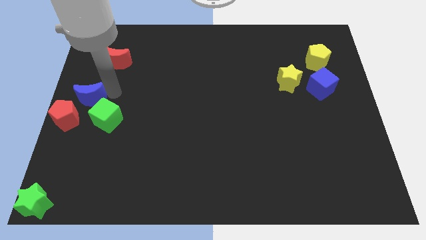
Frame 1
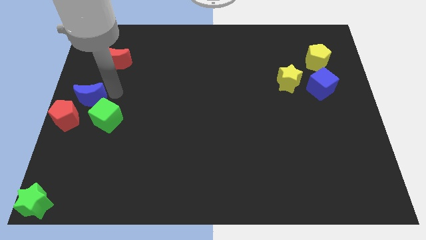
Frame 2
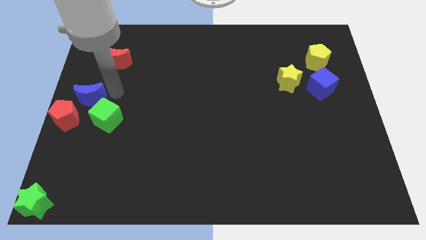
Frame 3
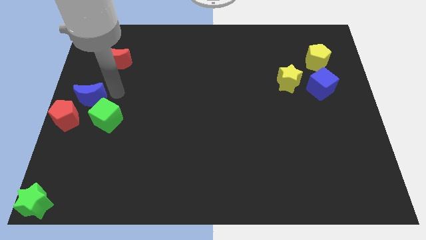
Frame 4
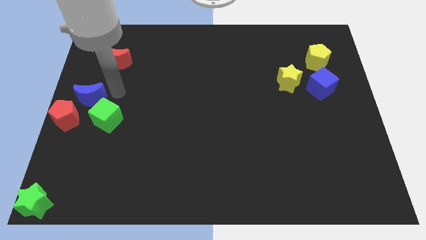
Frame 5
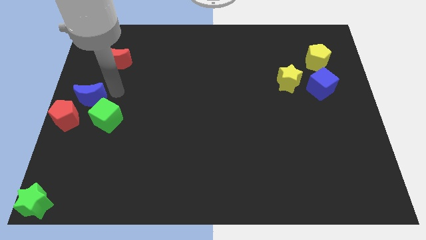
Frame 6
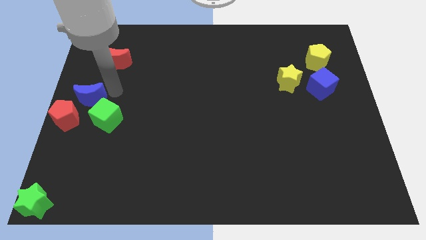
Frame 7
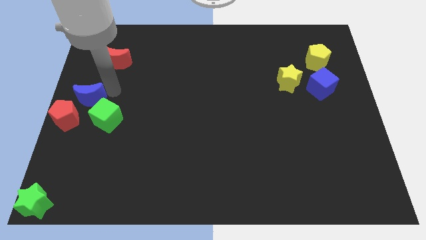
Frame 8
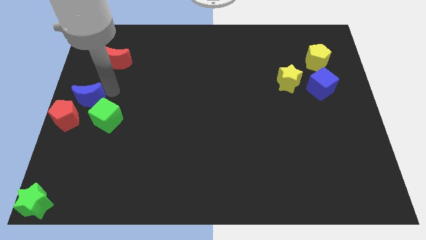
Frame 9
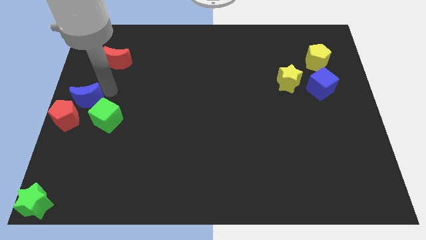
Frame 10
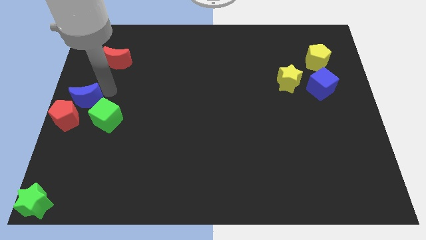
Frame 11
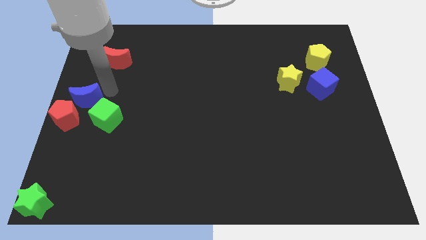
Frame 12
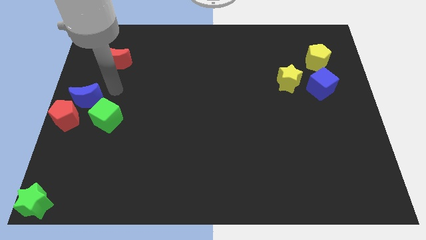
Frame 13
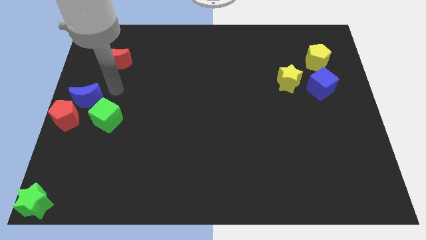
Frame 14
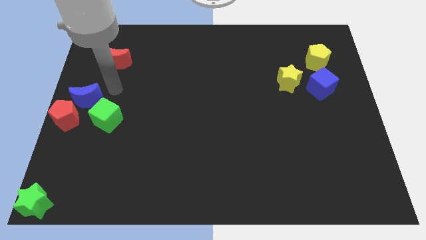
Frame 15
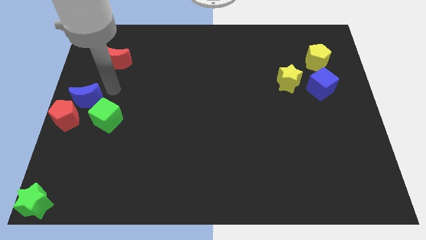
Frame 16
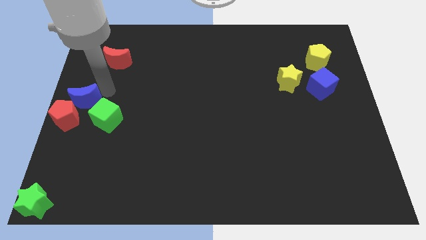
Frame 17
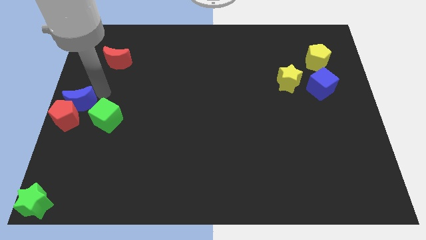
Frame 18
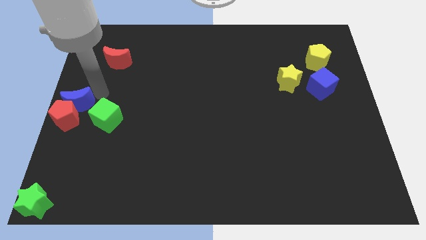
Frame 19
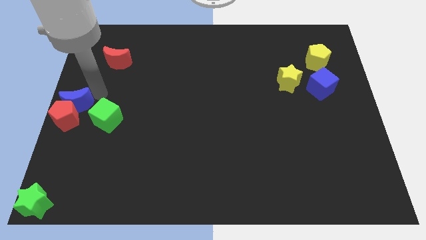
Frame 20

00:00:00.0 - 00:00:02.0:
move the blue crescent to the left

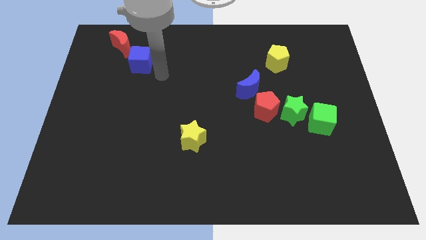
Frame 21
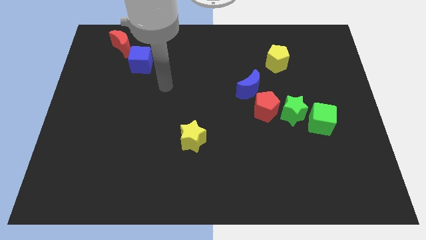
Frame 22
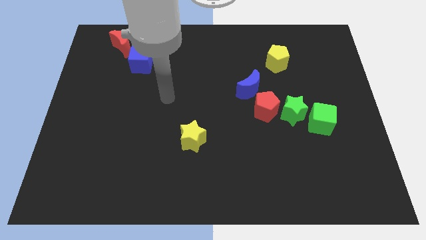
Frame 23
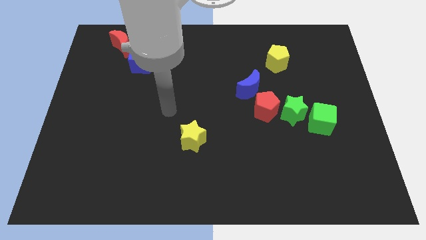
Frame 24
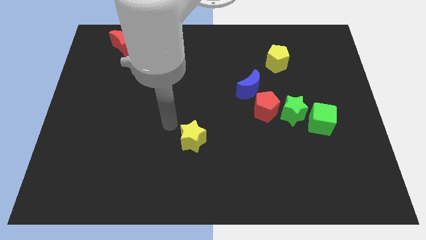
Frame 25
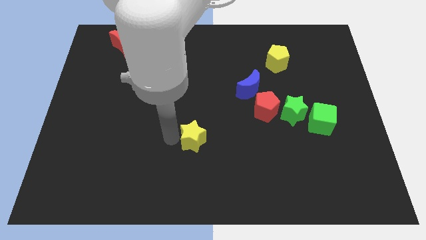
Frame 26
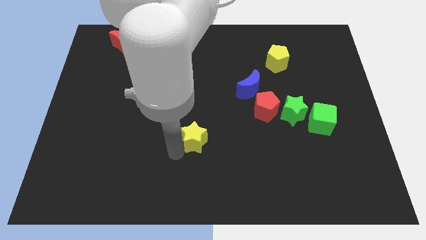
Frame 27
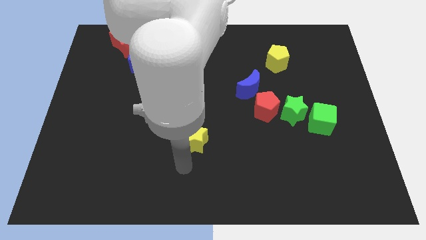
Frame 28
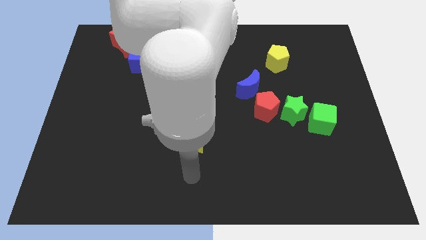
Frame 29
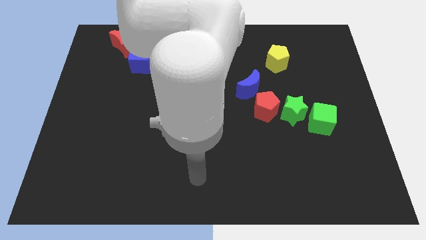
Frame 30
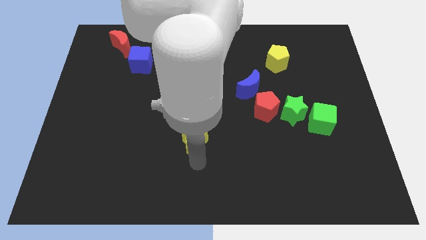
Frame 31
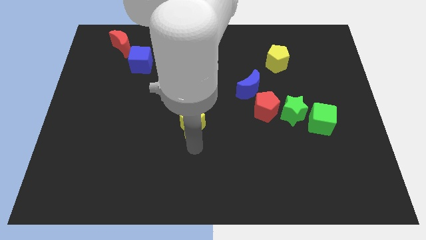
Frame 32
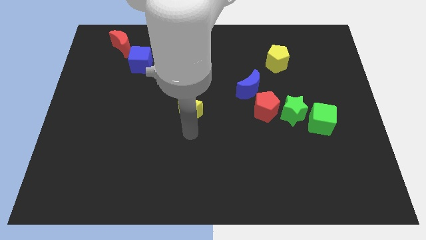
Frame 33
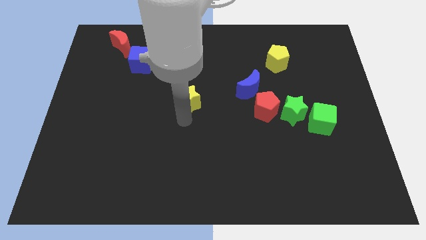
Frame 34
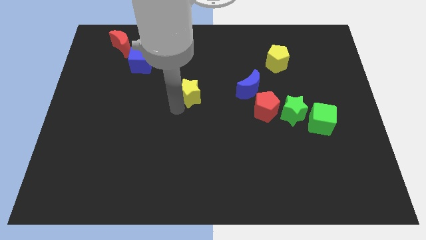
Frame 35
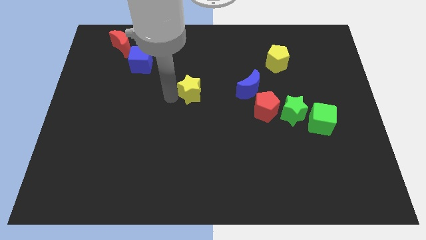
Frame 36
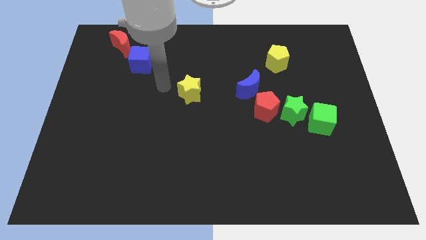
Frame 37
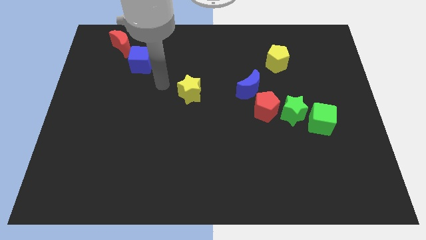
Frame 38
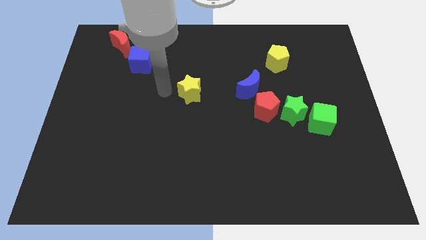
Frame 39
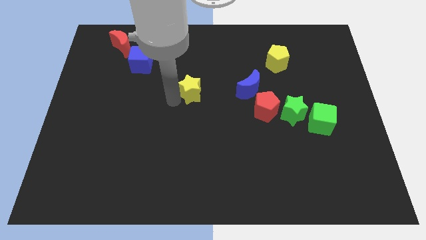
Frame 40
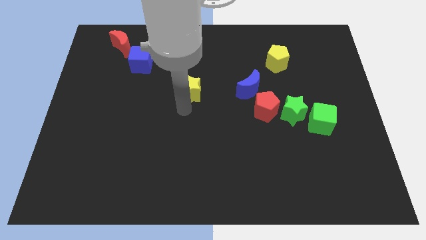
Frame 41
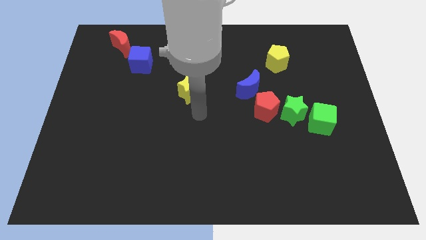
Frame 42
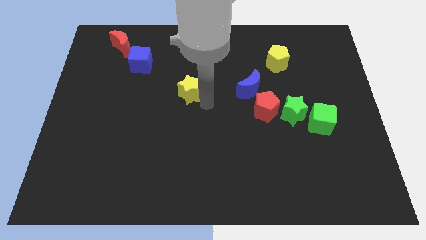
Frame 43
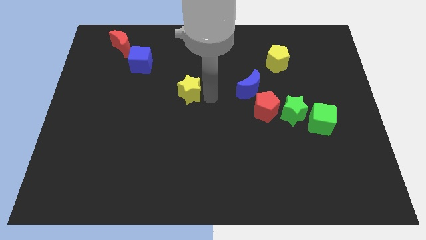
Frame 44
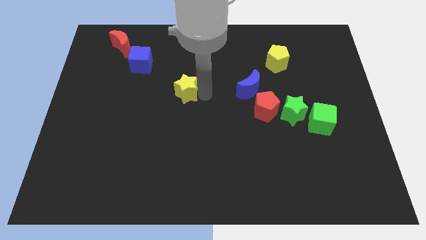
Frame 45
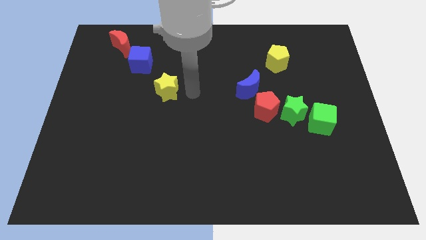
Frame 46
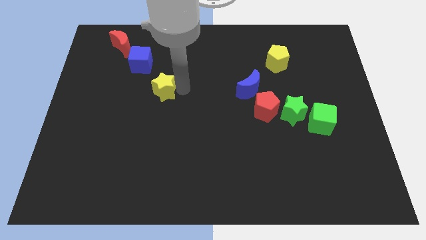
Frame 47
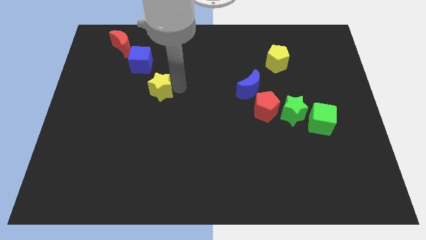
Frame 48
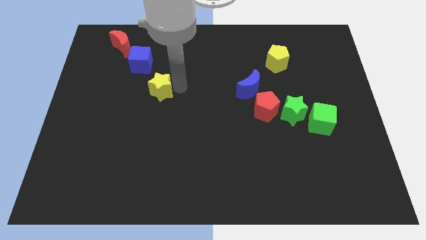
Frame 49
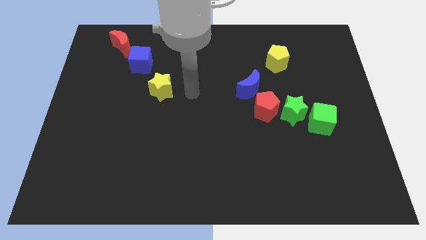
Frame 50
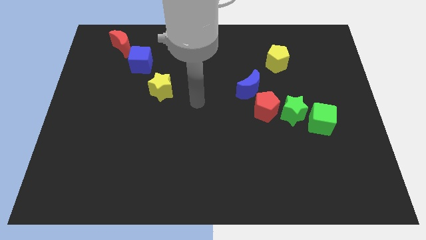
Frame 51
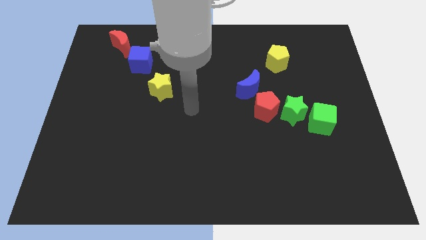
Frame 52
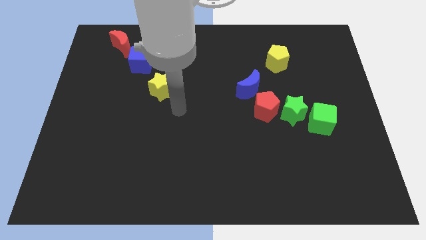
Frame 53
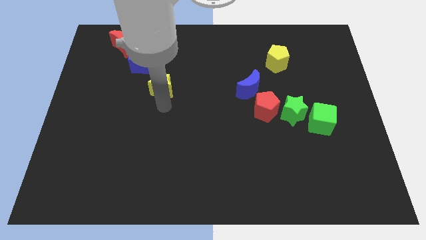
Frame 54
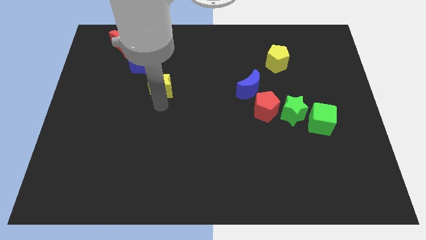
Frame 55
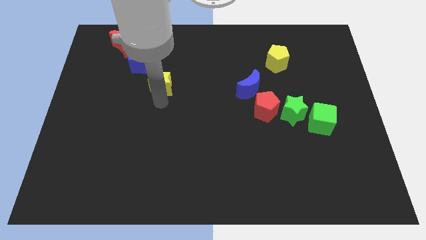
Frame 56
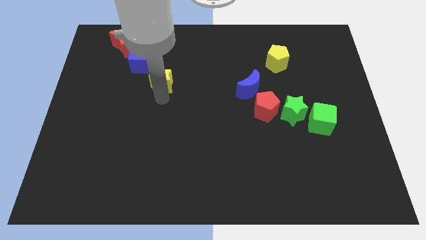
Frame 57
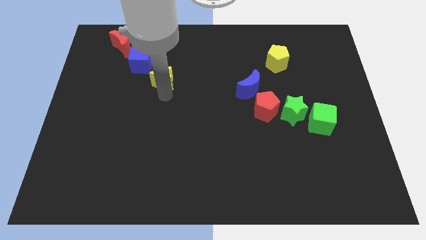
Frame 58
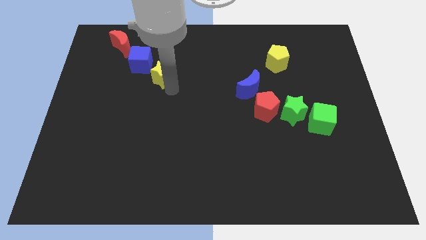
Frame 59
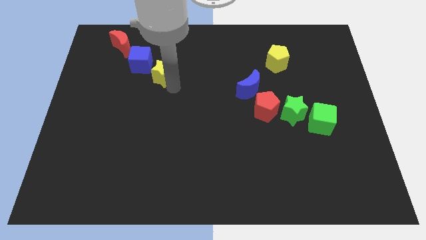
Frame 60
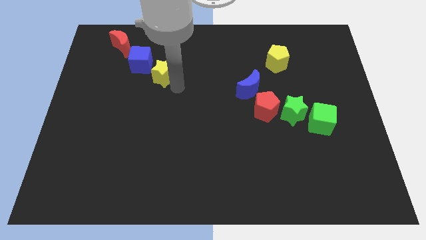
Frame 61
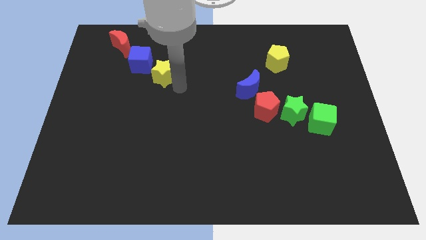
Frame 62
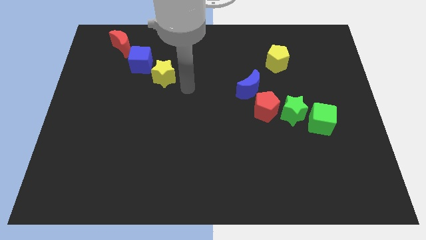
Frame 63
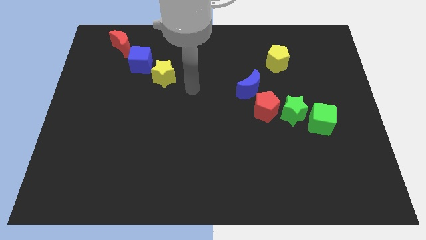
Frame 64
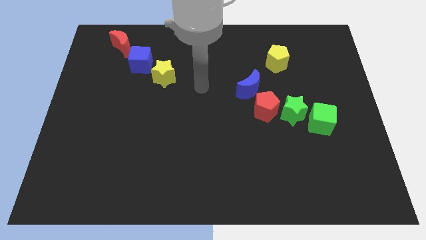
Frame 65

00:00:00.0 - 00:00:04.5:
place the yellow star to bottom right of blue cube

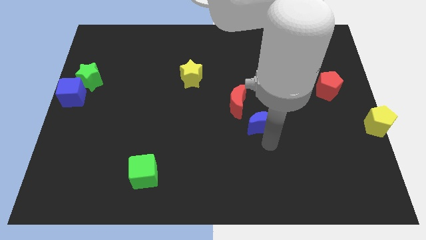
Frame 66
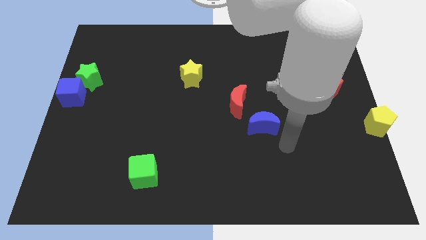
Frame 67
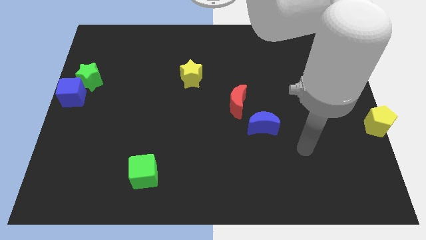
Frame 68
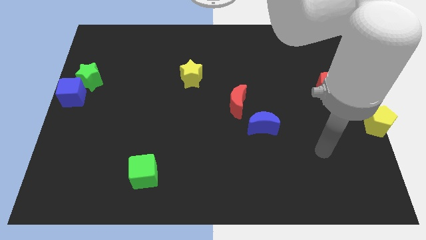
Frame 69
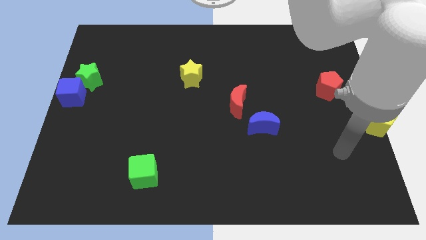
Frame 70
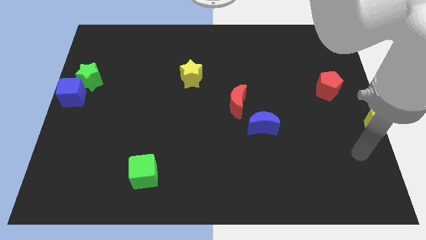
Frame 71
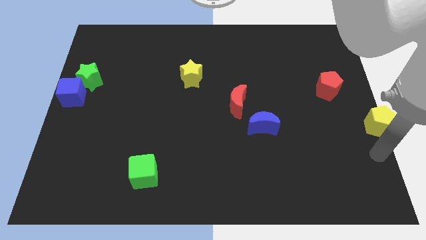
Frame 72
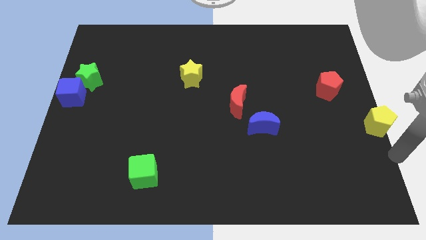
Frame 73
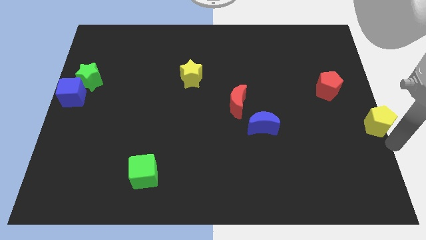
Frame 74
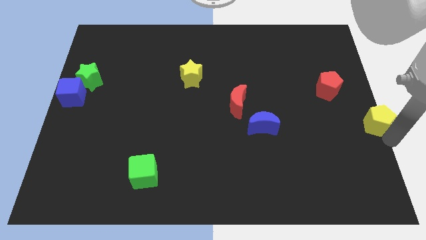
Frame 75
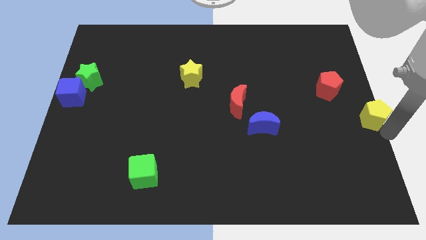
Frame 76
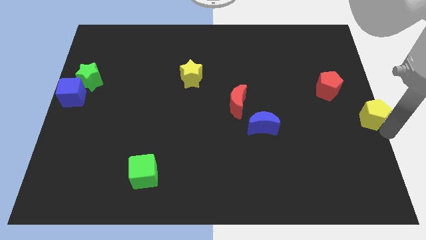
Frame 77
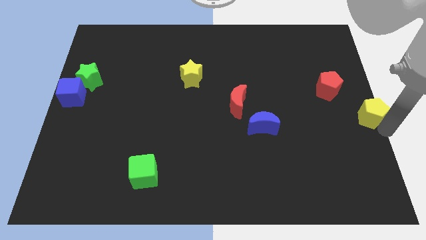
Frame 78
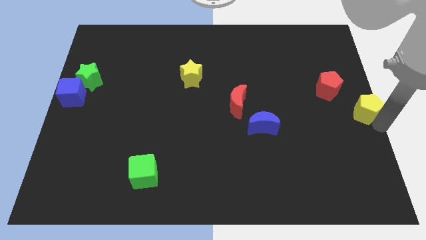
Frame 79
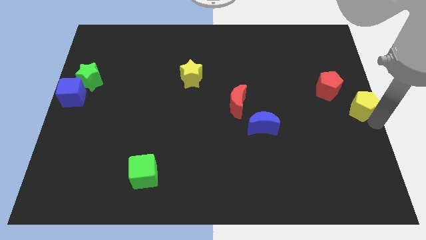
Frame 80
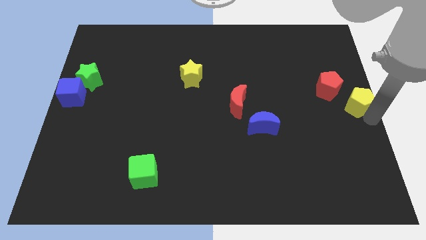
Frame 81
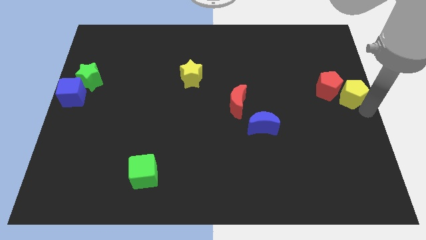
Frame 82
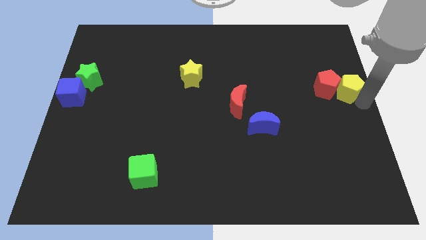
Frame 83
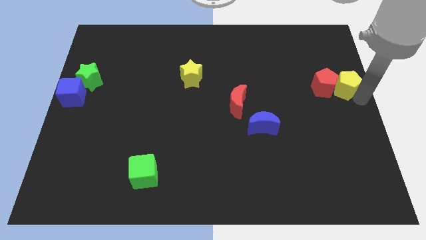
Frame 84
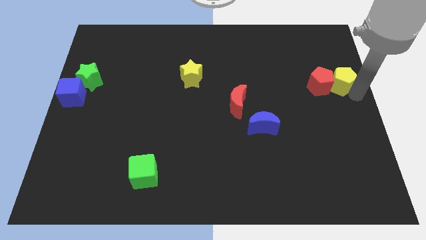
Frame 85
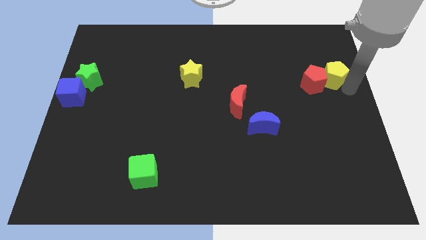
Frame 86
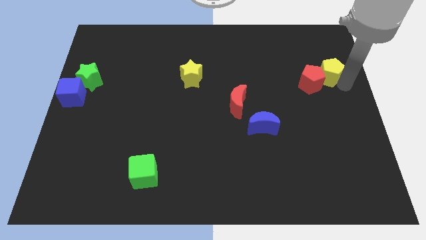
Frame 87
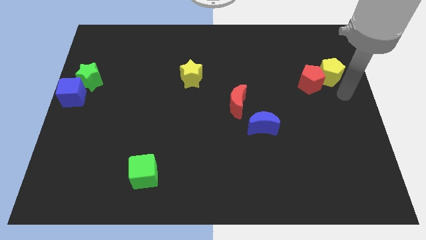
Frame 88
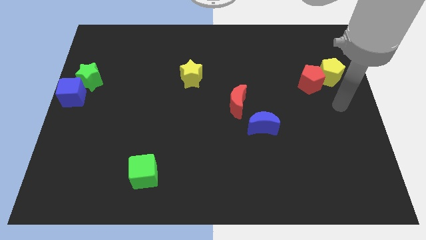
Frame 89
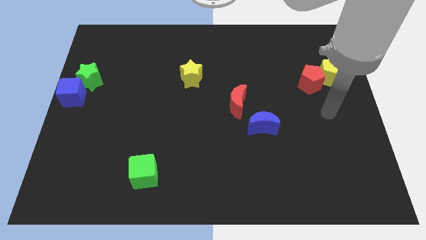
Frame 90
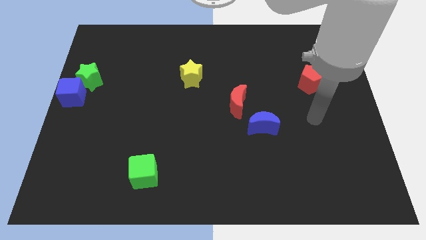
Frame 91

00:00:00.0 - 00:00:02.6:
push yellow pentagon into the red pentagon
